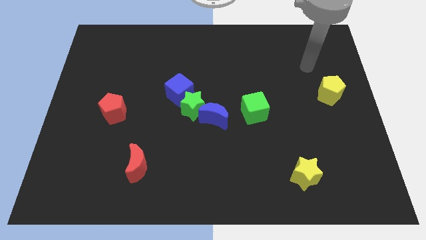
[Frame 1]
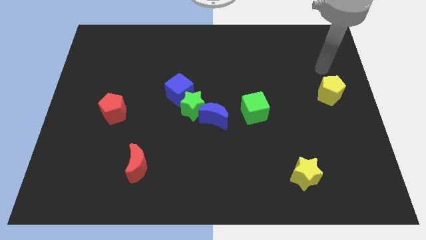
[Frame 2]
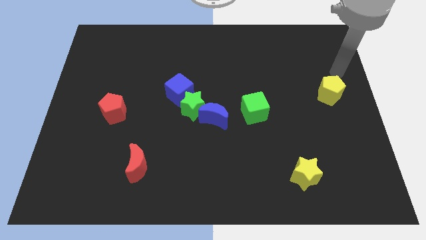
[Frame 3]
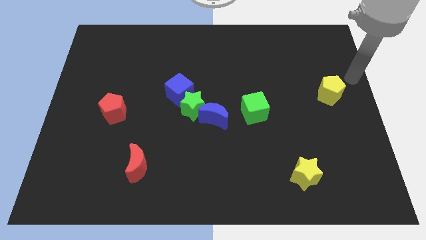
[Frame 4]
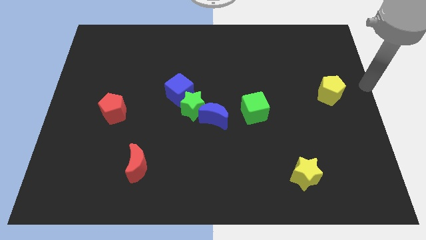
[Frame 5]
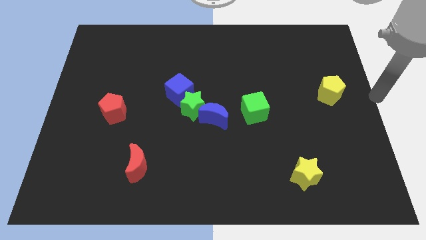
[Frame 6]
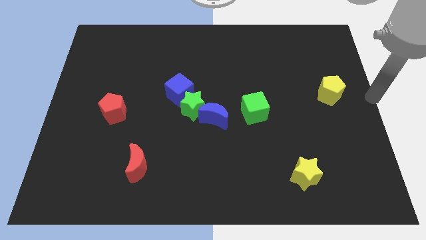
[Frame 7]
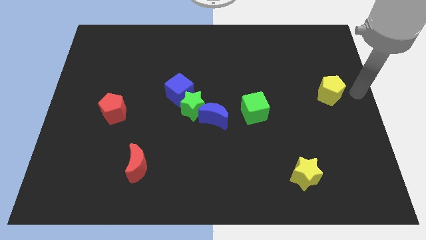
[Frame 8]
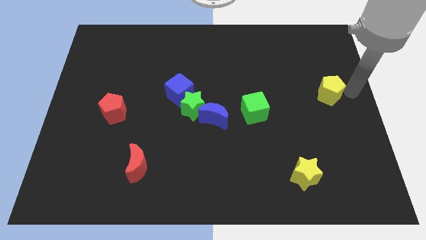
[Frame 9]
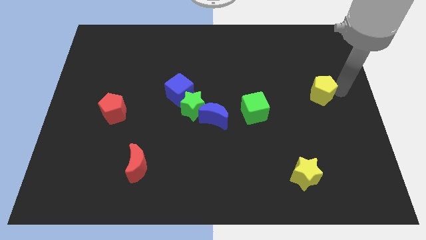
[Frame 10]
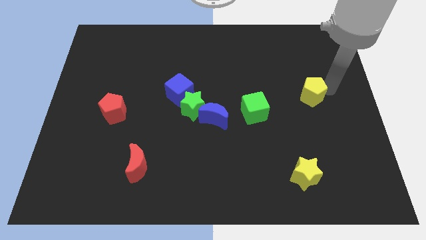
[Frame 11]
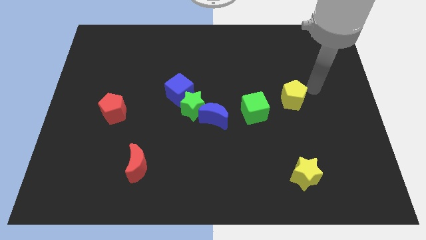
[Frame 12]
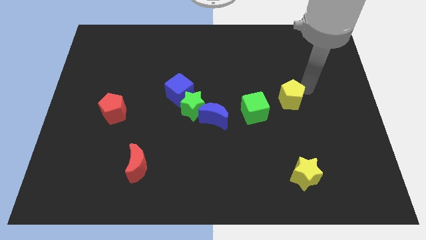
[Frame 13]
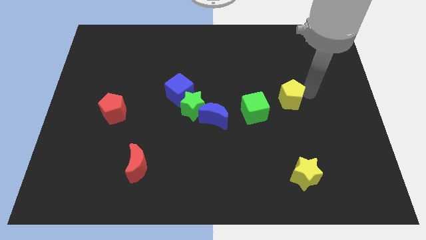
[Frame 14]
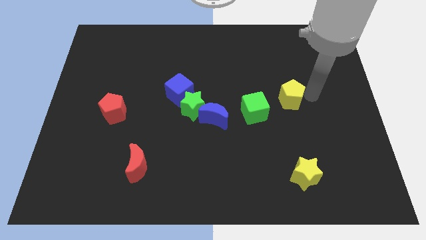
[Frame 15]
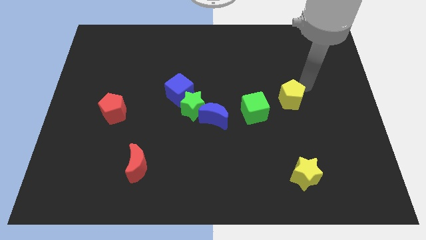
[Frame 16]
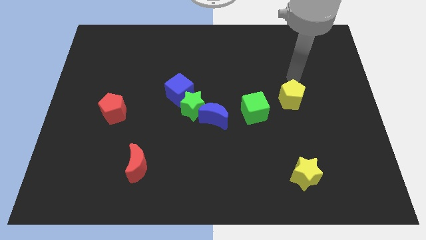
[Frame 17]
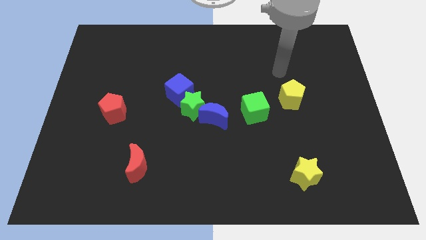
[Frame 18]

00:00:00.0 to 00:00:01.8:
move the yellow pentagon vertically above the yellow star

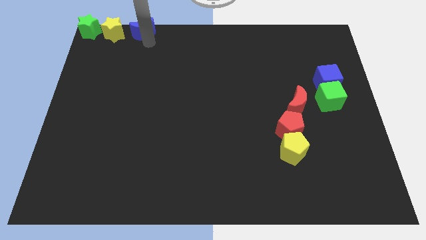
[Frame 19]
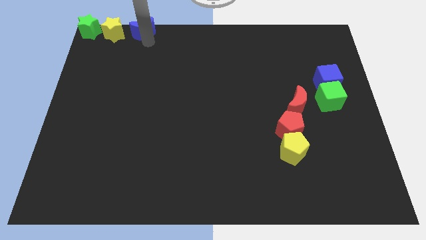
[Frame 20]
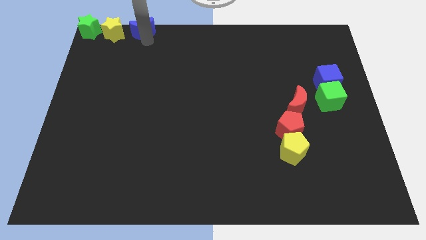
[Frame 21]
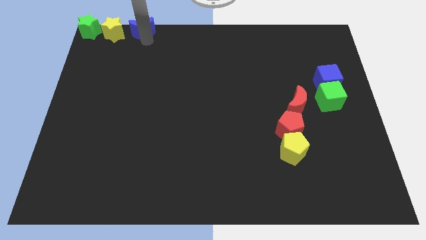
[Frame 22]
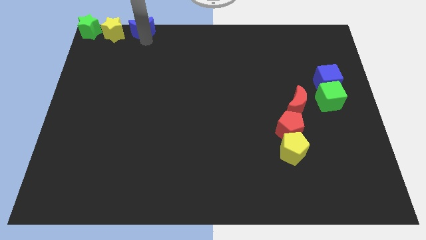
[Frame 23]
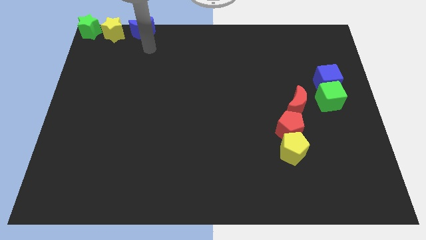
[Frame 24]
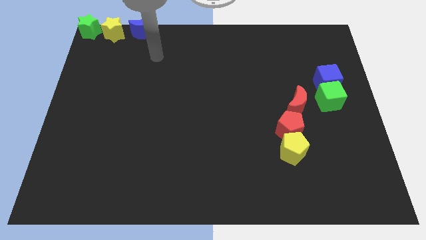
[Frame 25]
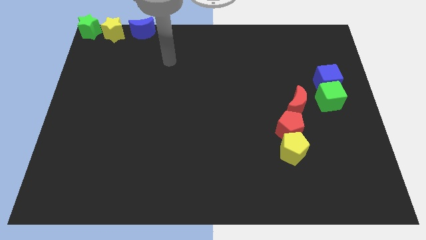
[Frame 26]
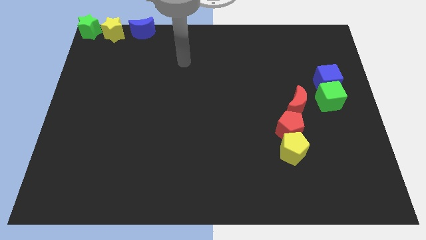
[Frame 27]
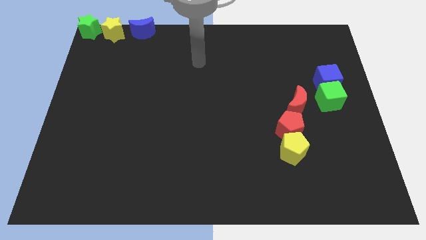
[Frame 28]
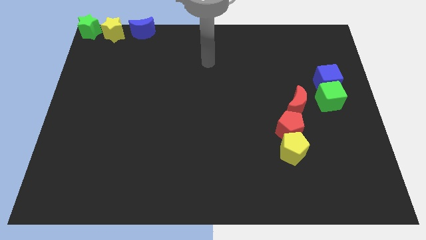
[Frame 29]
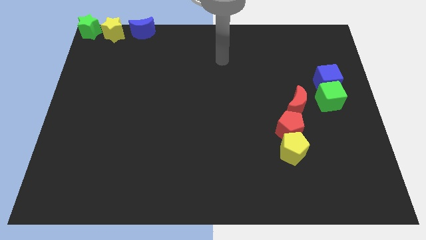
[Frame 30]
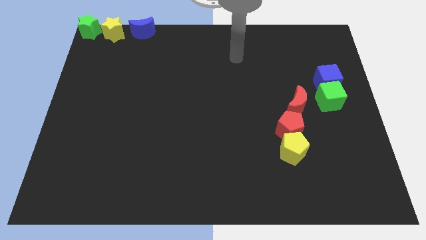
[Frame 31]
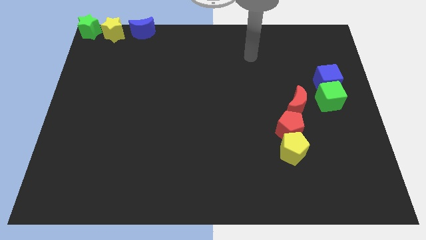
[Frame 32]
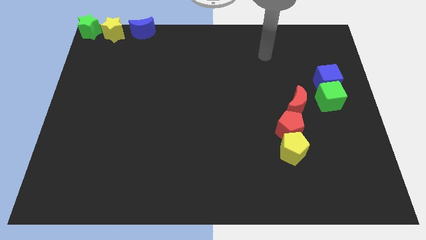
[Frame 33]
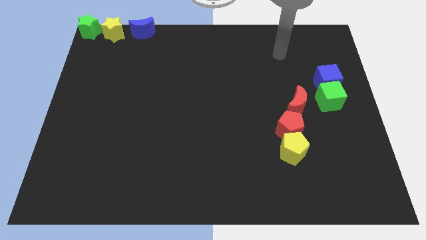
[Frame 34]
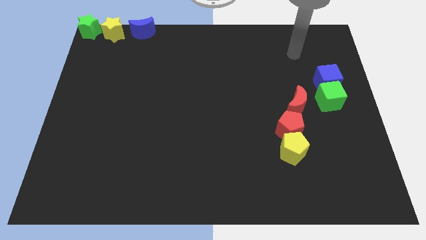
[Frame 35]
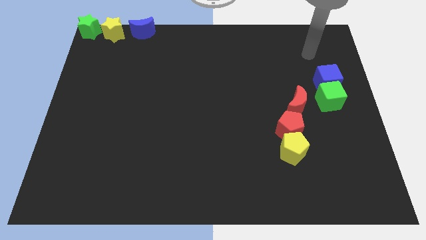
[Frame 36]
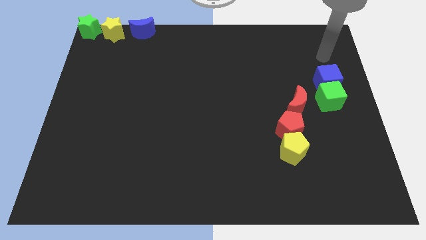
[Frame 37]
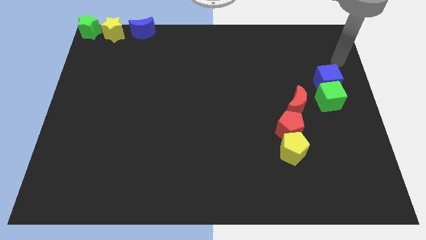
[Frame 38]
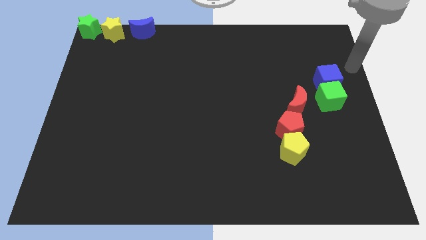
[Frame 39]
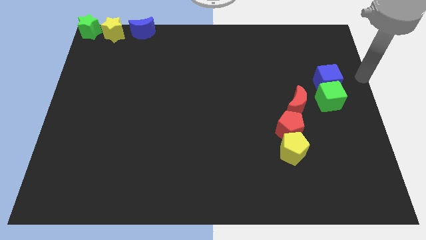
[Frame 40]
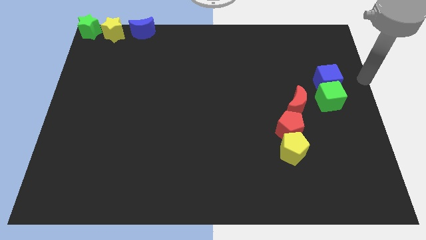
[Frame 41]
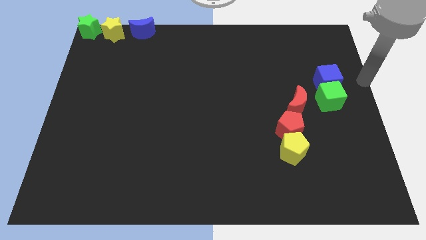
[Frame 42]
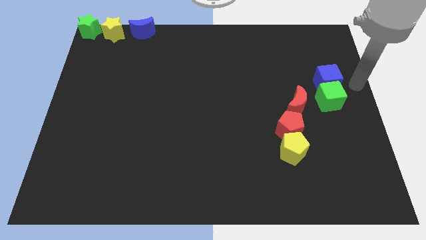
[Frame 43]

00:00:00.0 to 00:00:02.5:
move your arm away from the blue moon

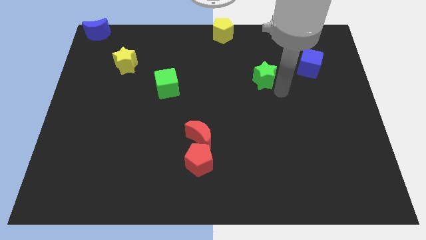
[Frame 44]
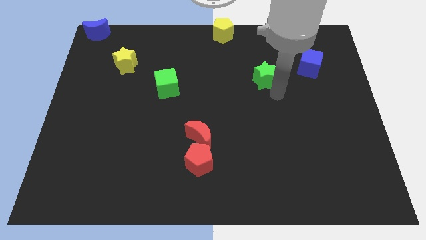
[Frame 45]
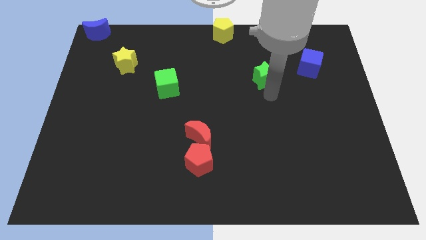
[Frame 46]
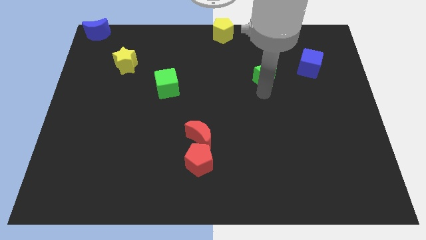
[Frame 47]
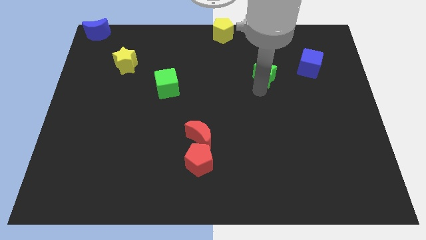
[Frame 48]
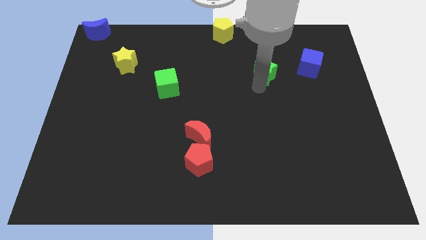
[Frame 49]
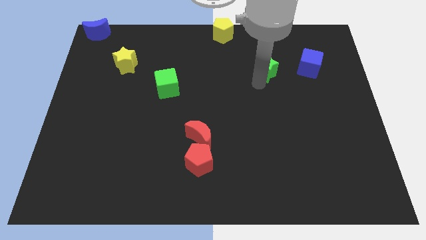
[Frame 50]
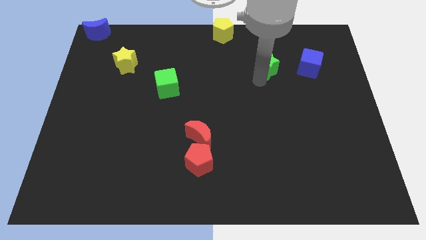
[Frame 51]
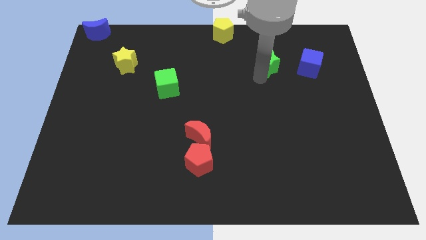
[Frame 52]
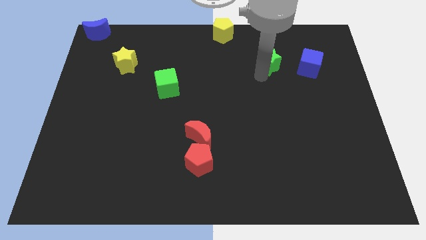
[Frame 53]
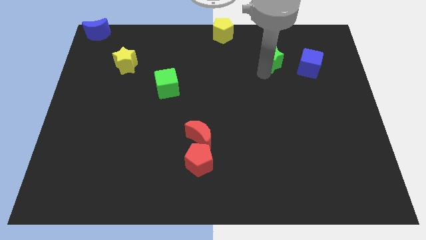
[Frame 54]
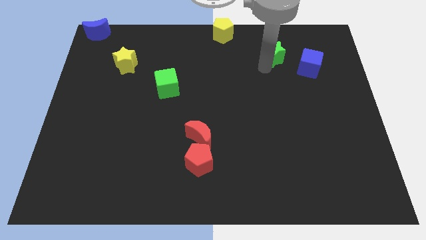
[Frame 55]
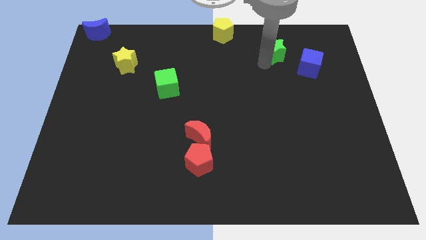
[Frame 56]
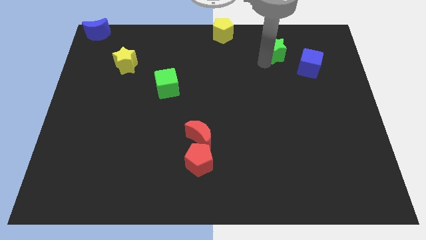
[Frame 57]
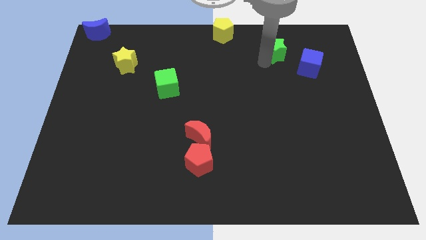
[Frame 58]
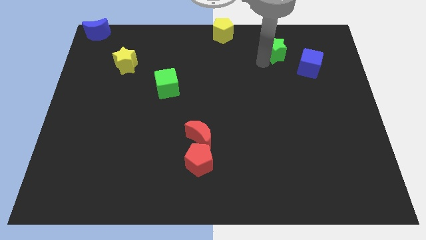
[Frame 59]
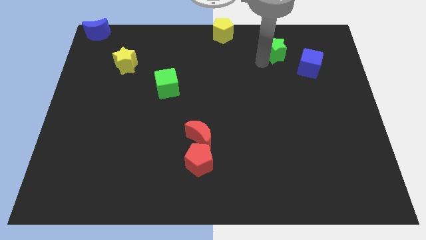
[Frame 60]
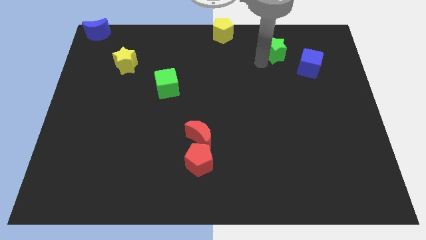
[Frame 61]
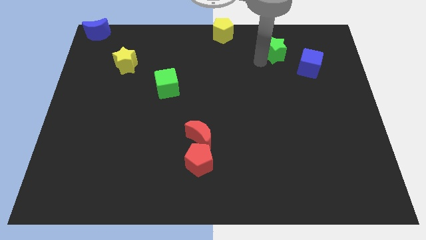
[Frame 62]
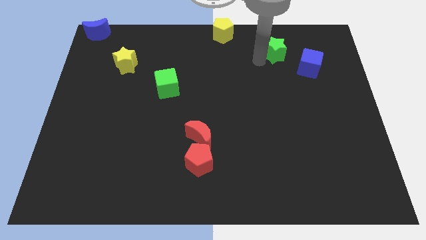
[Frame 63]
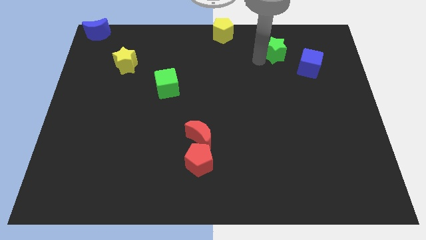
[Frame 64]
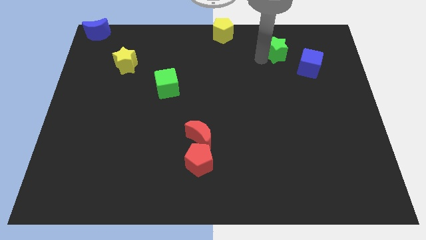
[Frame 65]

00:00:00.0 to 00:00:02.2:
move the green star in between the yellow pentagon and the blue cube

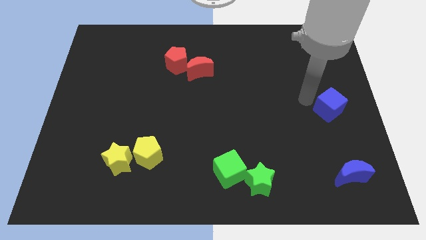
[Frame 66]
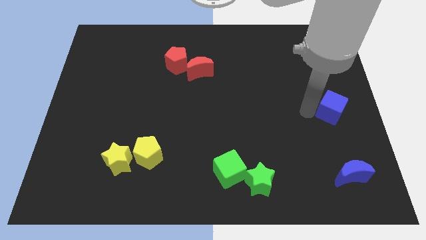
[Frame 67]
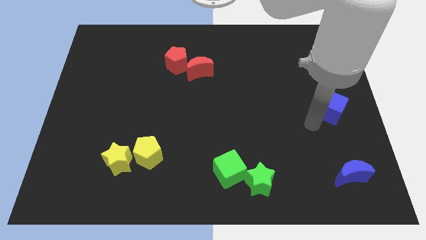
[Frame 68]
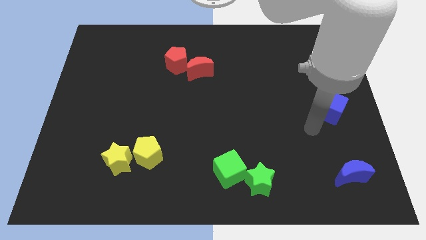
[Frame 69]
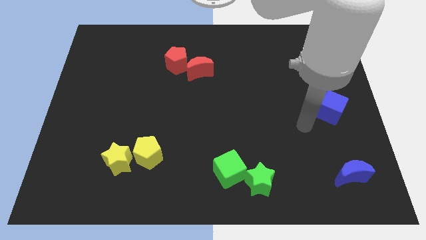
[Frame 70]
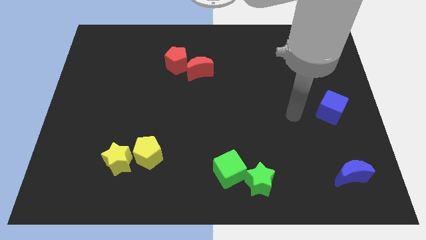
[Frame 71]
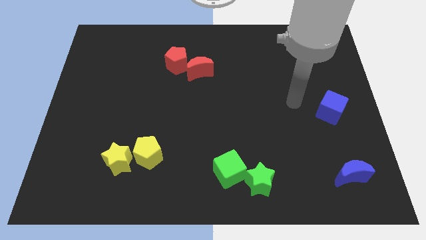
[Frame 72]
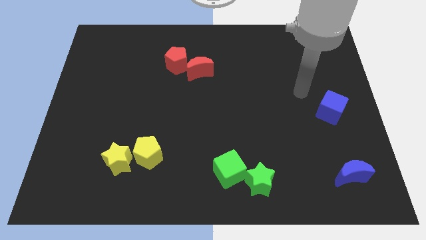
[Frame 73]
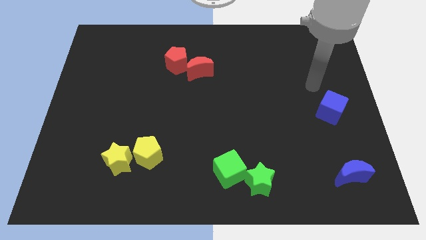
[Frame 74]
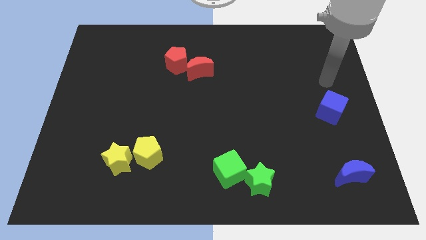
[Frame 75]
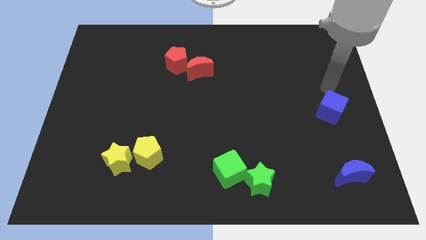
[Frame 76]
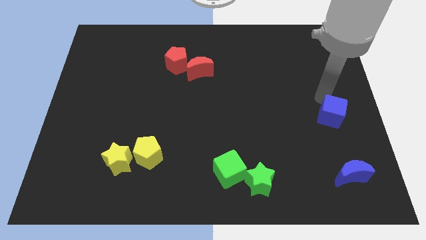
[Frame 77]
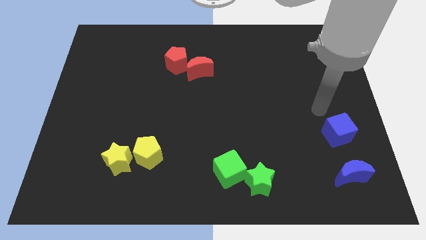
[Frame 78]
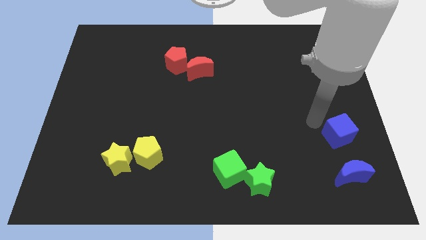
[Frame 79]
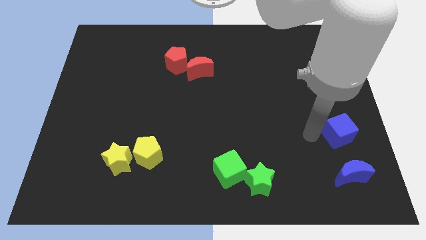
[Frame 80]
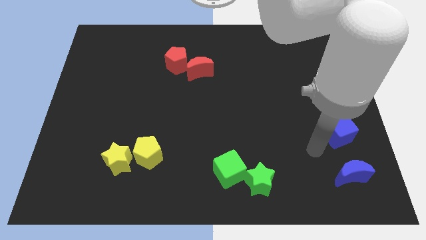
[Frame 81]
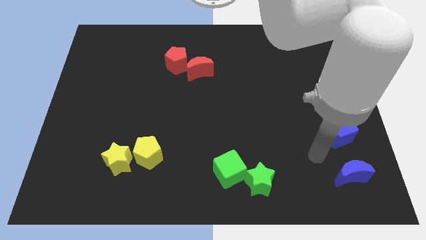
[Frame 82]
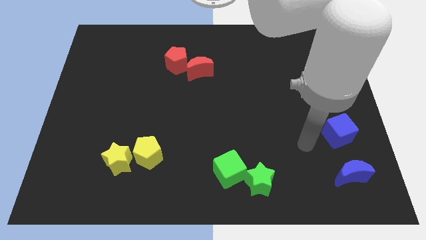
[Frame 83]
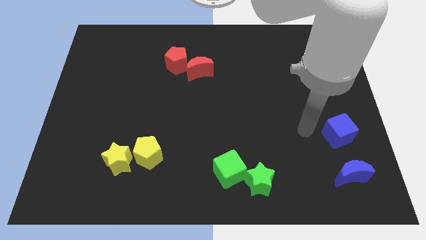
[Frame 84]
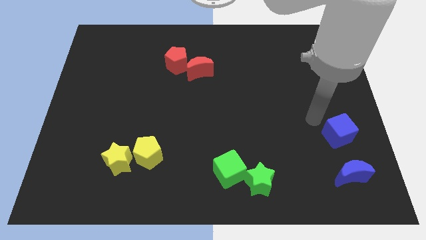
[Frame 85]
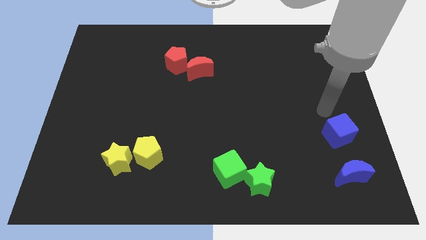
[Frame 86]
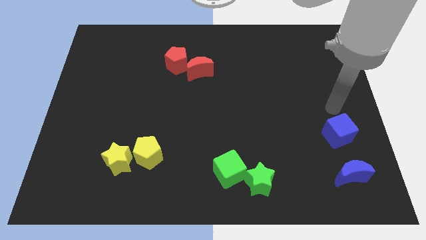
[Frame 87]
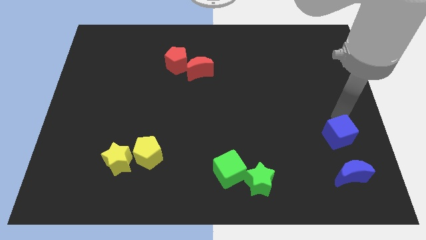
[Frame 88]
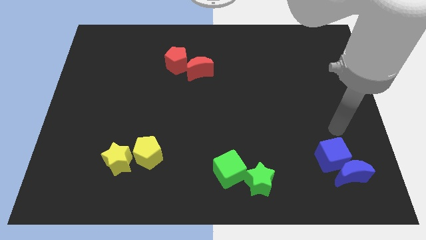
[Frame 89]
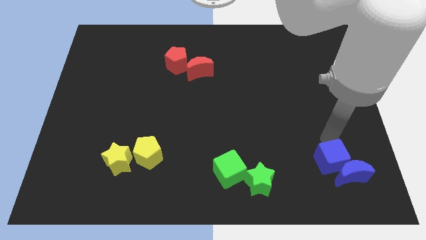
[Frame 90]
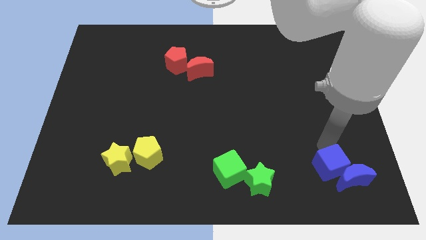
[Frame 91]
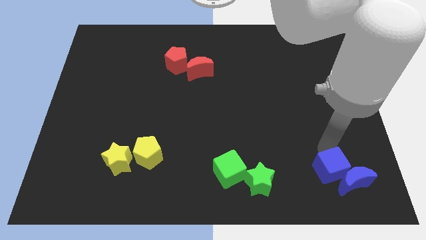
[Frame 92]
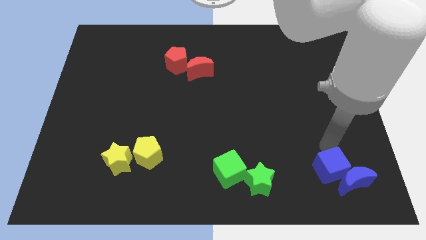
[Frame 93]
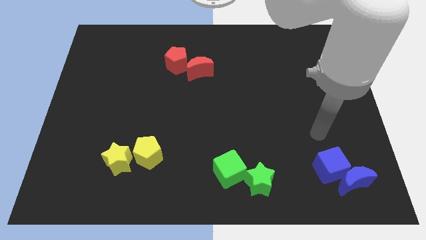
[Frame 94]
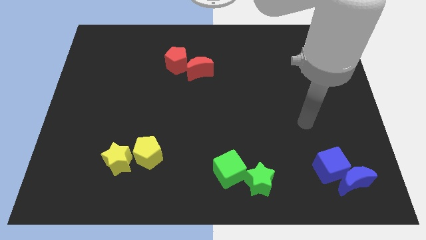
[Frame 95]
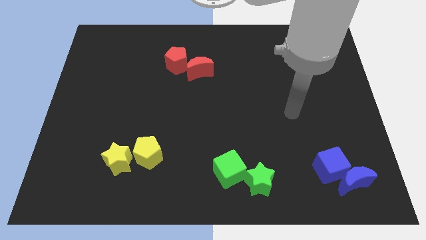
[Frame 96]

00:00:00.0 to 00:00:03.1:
move the blue blocks together at the right side of the green blocks
